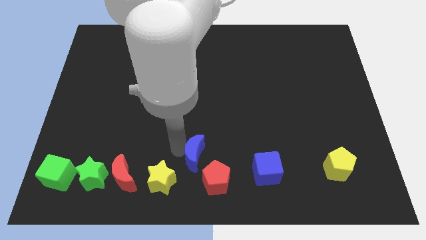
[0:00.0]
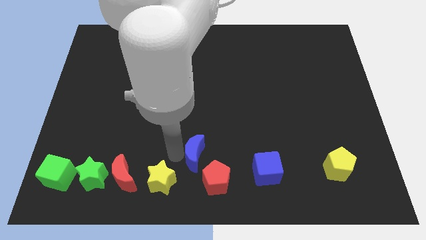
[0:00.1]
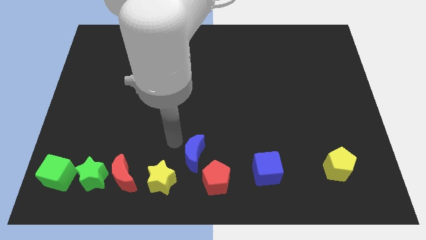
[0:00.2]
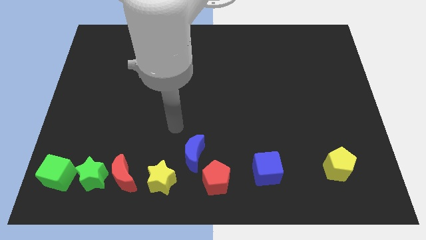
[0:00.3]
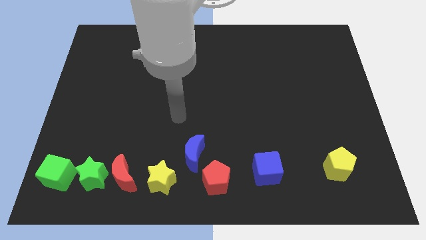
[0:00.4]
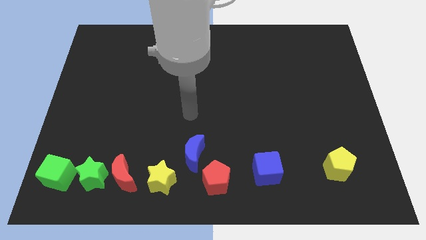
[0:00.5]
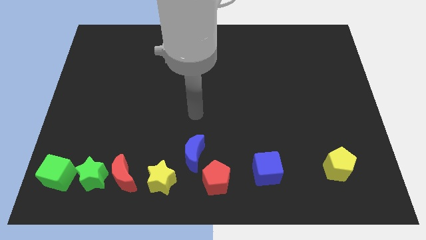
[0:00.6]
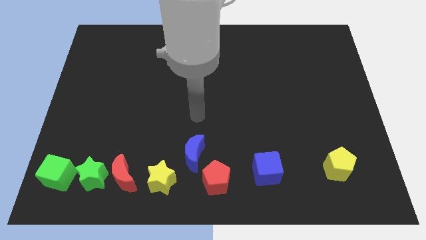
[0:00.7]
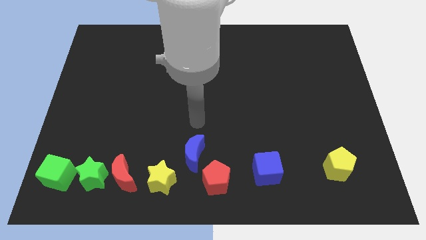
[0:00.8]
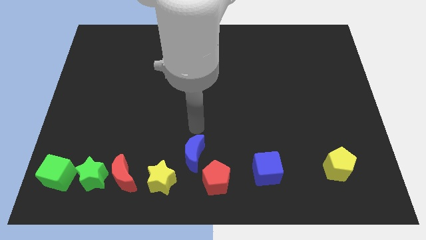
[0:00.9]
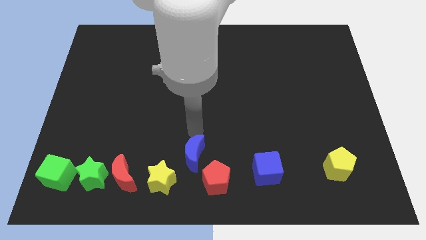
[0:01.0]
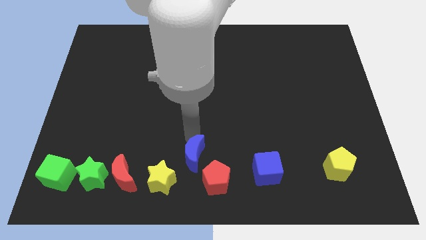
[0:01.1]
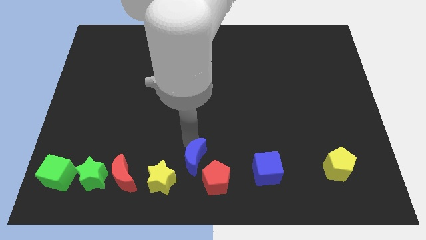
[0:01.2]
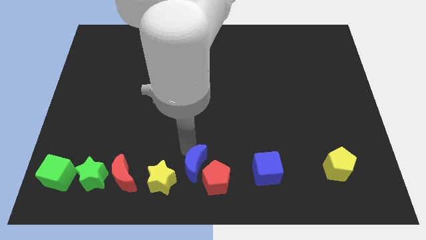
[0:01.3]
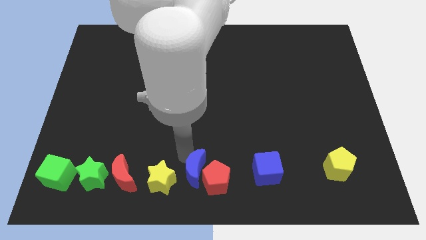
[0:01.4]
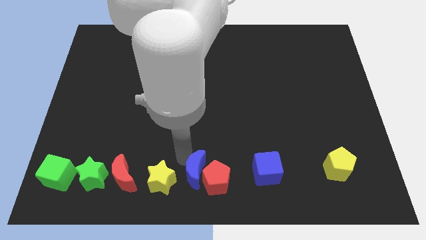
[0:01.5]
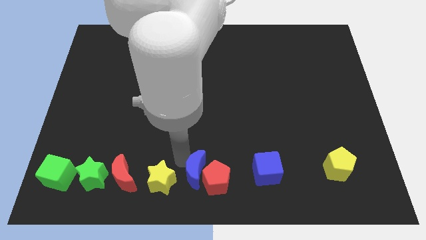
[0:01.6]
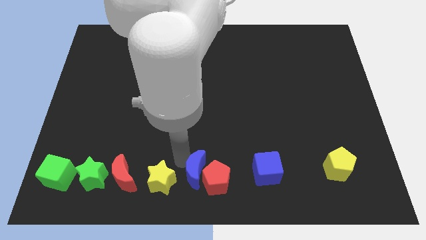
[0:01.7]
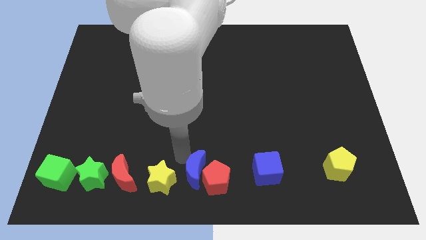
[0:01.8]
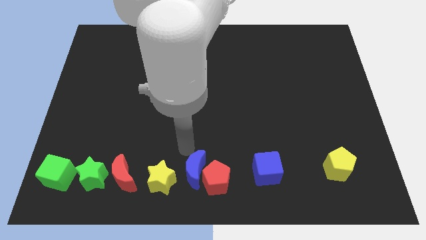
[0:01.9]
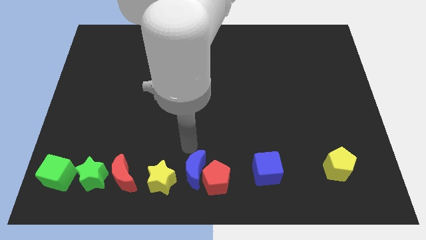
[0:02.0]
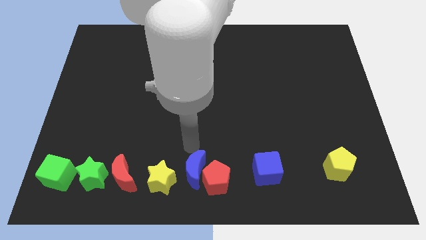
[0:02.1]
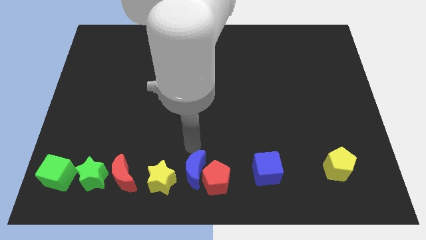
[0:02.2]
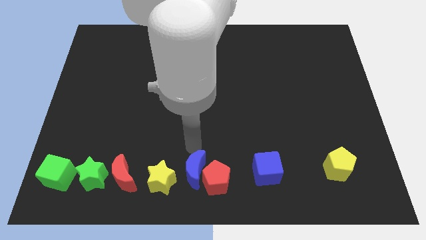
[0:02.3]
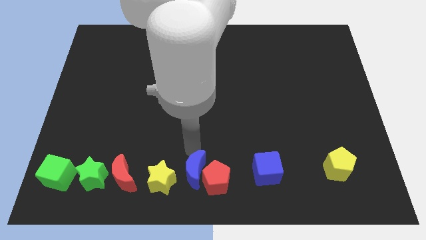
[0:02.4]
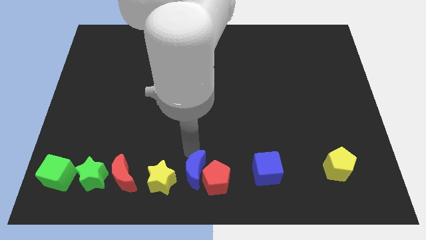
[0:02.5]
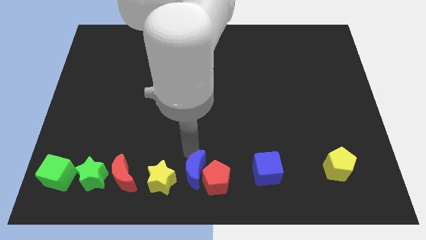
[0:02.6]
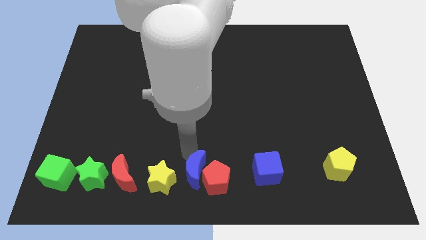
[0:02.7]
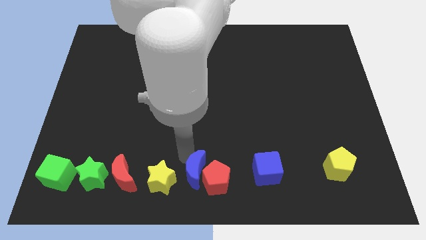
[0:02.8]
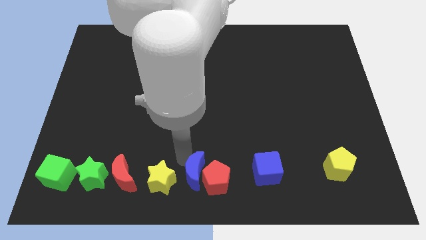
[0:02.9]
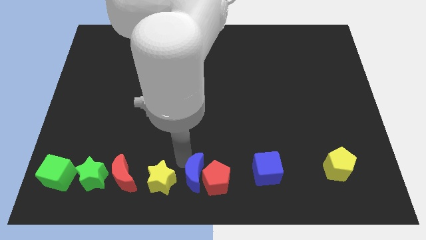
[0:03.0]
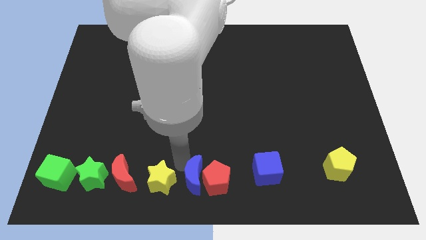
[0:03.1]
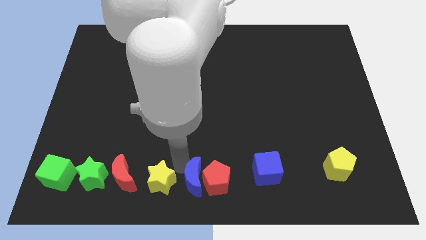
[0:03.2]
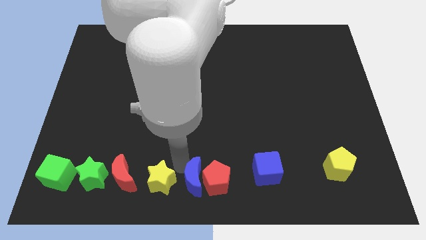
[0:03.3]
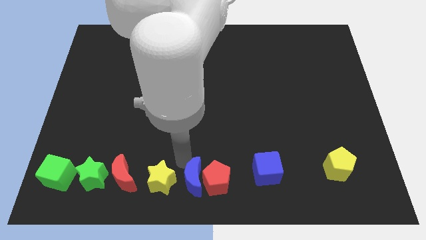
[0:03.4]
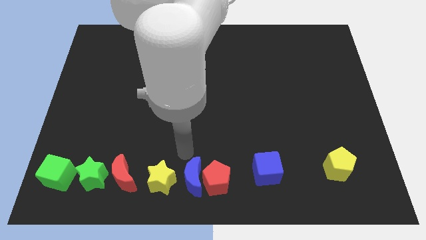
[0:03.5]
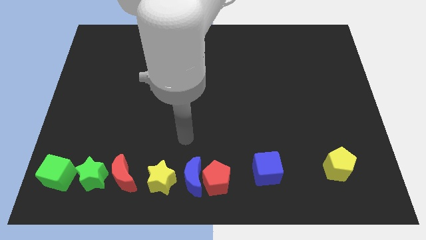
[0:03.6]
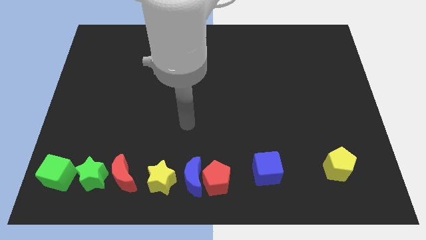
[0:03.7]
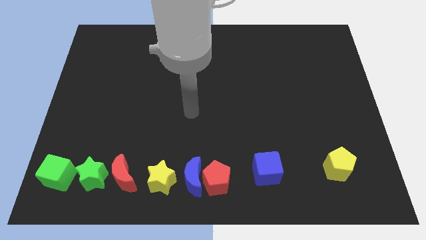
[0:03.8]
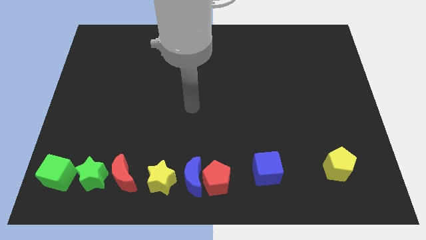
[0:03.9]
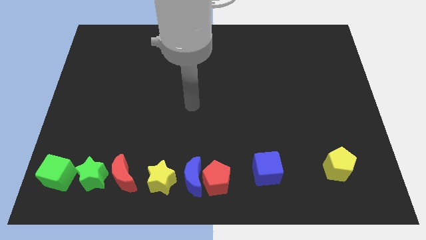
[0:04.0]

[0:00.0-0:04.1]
place the blue crescent in between the red pentagon and the yellow star

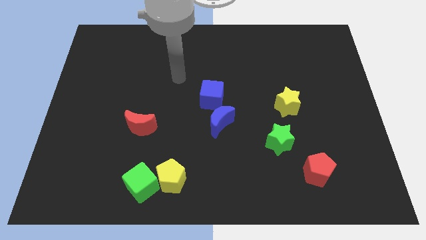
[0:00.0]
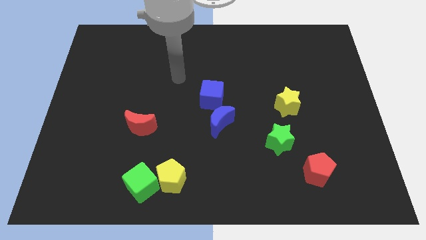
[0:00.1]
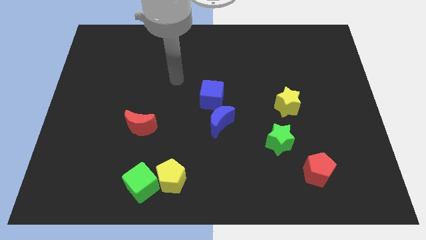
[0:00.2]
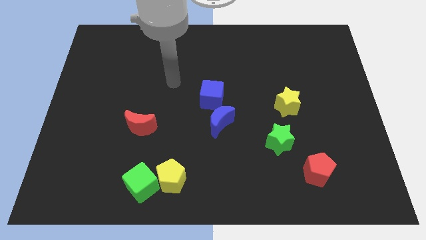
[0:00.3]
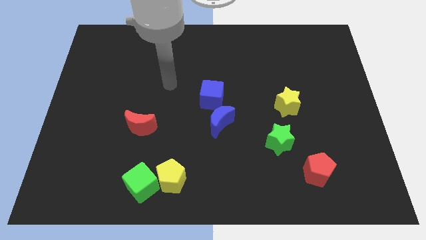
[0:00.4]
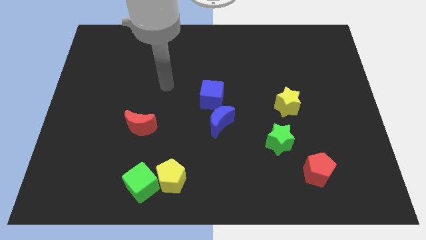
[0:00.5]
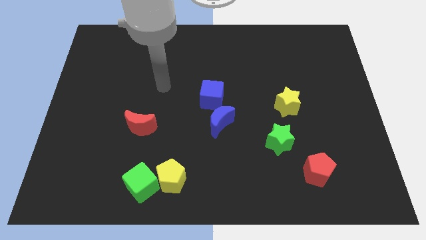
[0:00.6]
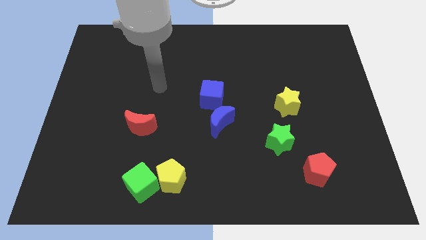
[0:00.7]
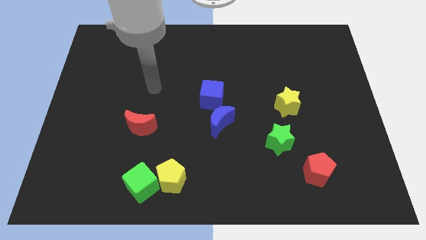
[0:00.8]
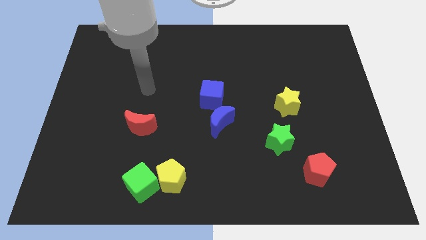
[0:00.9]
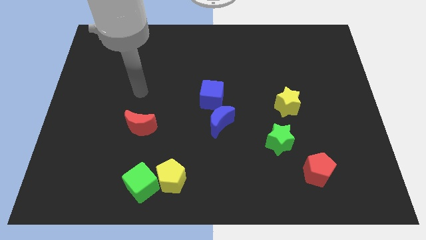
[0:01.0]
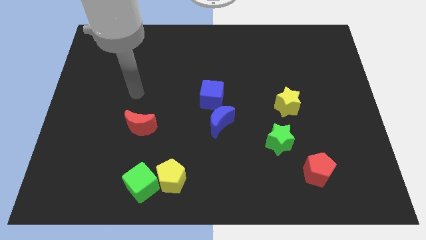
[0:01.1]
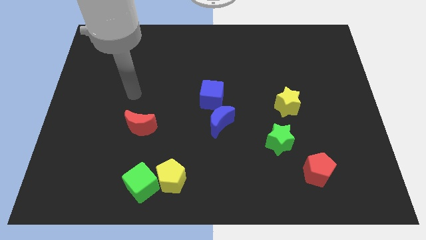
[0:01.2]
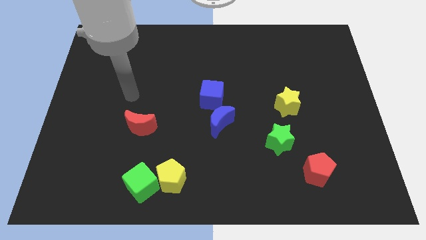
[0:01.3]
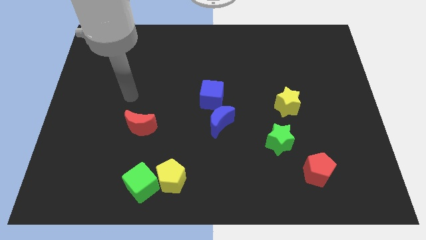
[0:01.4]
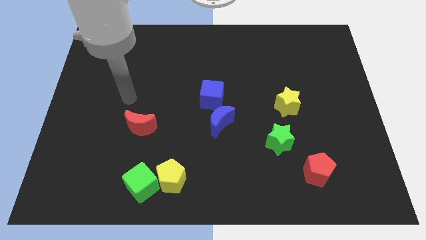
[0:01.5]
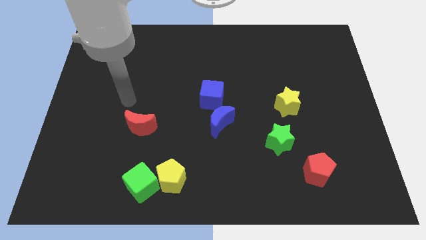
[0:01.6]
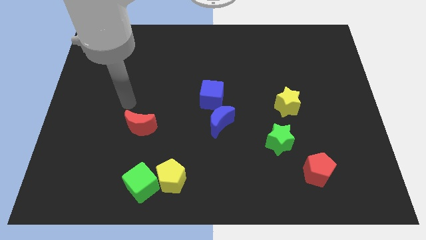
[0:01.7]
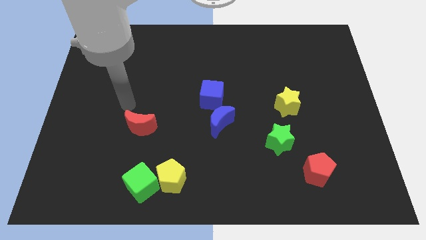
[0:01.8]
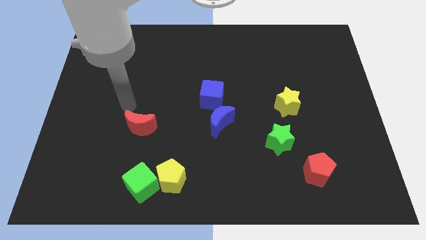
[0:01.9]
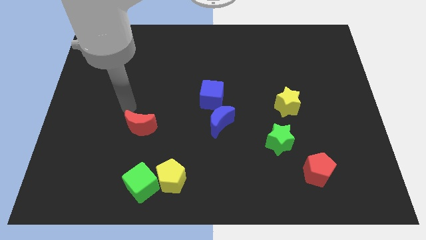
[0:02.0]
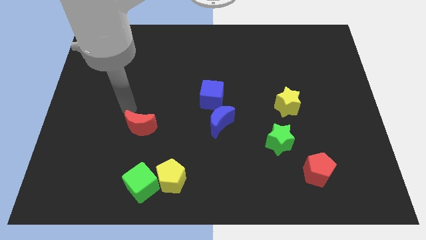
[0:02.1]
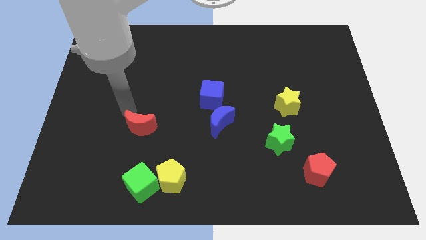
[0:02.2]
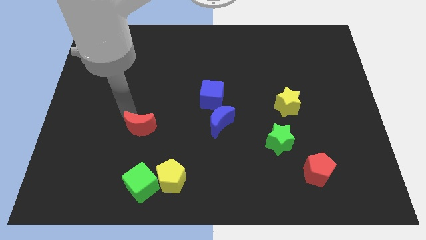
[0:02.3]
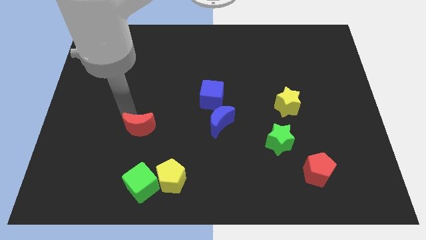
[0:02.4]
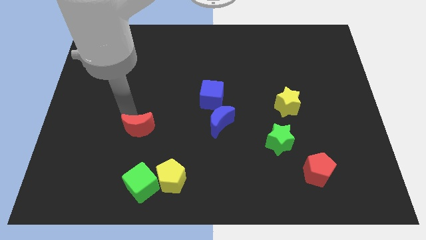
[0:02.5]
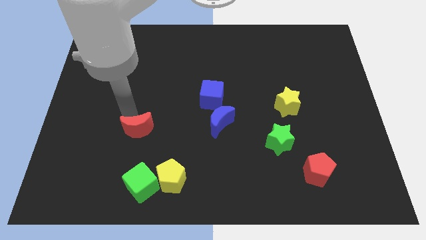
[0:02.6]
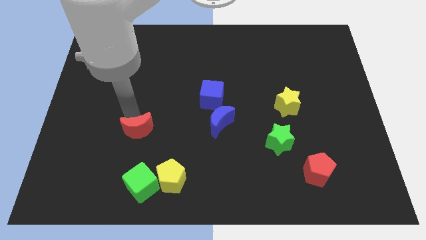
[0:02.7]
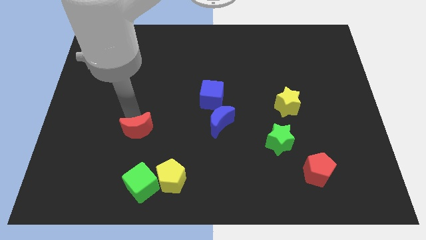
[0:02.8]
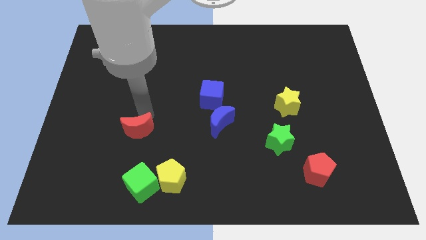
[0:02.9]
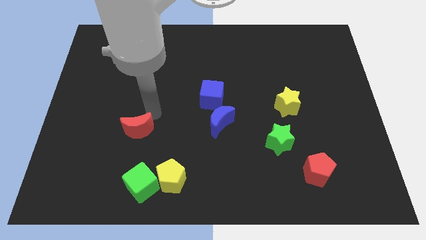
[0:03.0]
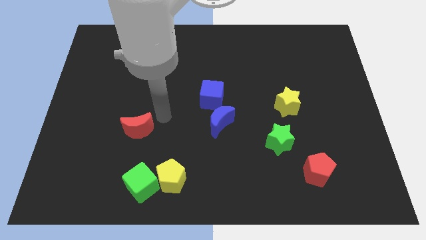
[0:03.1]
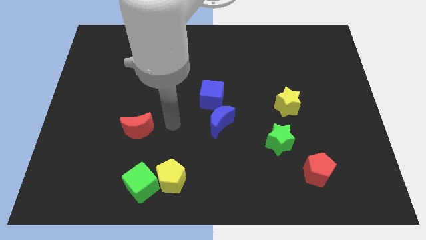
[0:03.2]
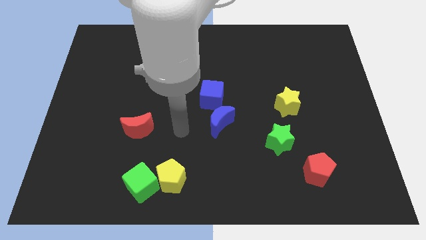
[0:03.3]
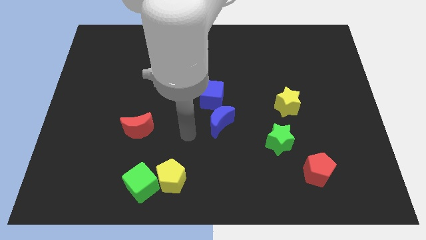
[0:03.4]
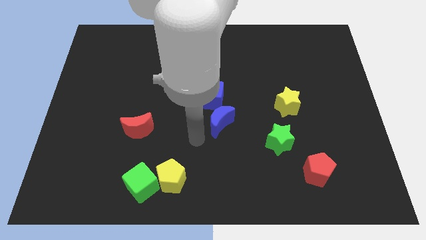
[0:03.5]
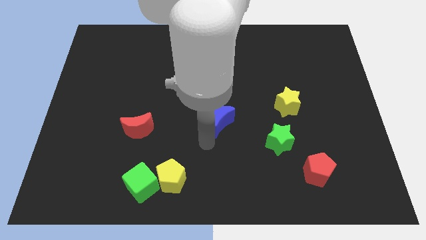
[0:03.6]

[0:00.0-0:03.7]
slightly move the red moon down

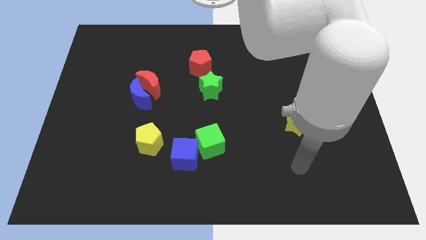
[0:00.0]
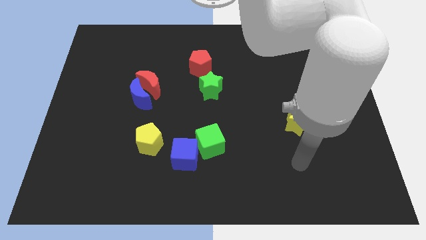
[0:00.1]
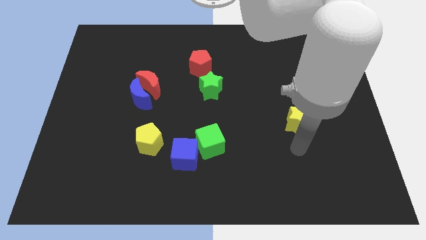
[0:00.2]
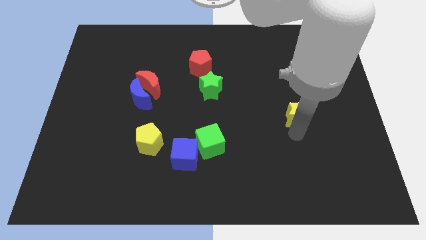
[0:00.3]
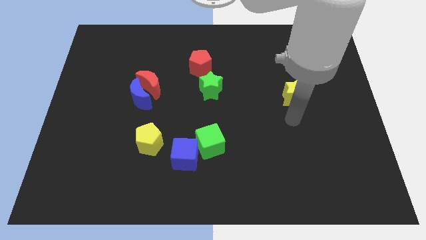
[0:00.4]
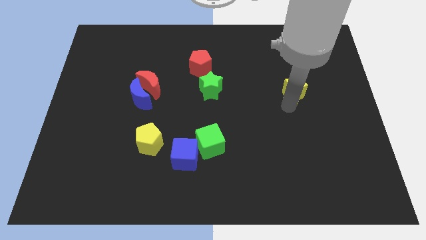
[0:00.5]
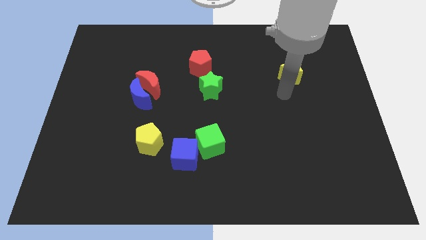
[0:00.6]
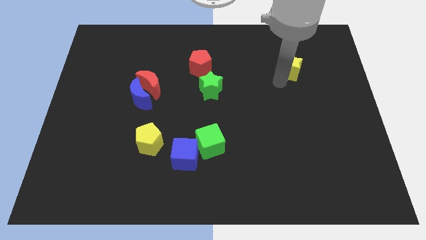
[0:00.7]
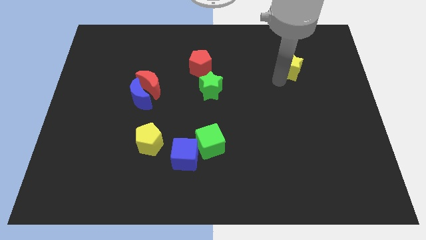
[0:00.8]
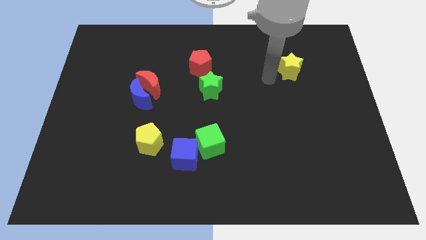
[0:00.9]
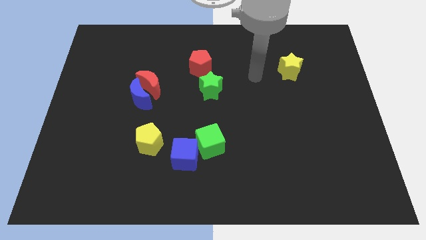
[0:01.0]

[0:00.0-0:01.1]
push the yellow star to the top side of the board
